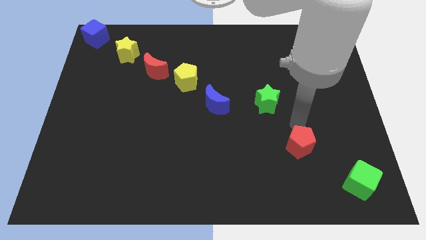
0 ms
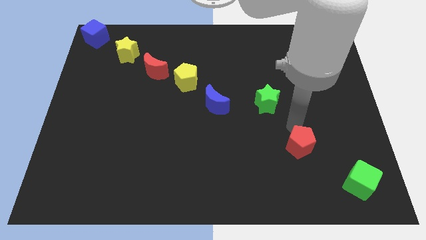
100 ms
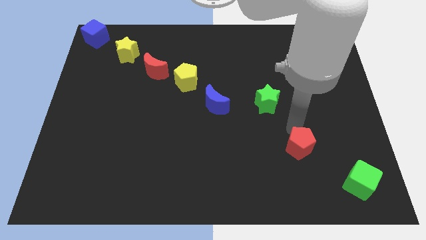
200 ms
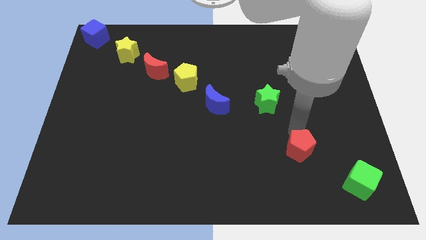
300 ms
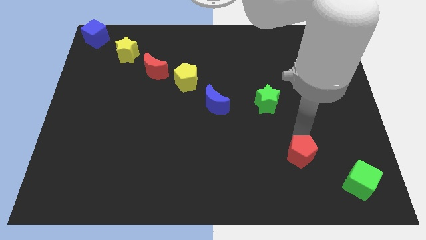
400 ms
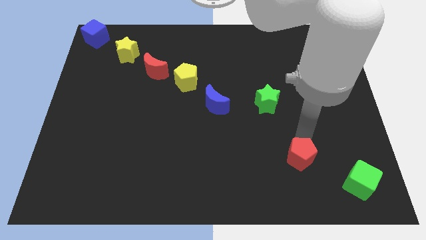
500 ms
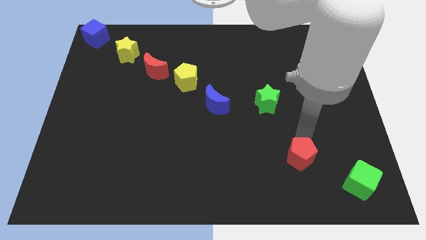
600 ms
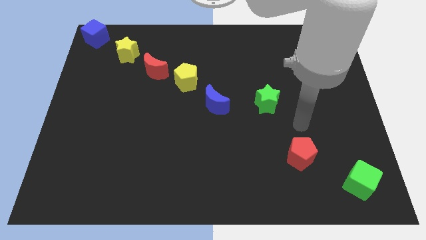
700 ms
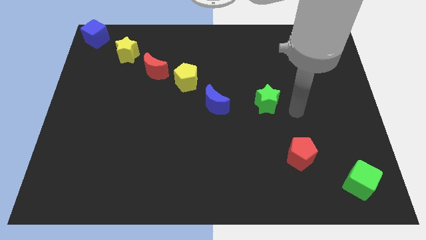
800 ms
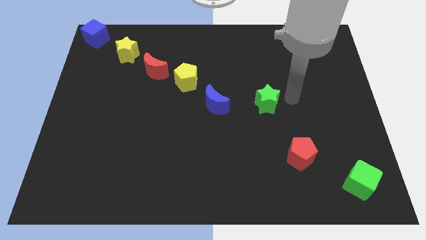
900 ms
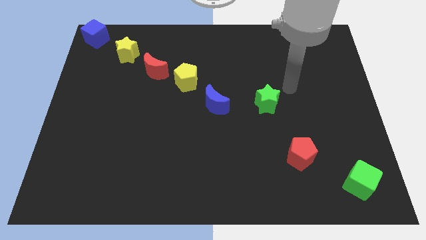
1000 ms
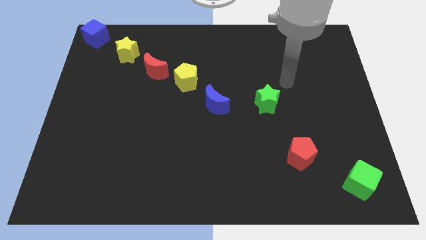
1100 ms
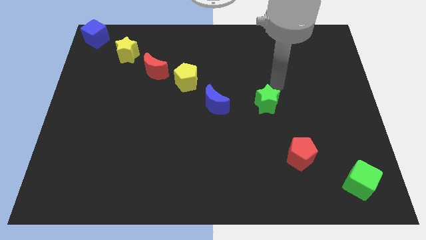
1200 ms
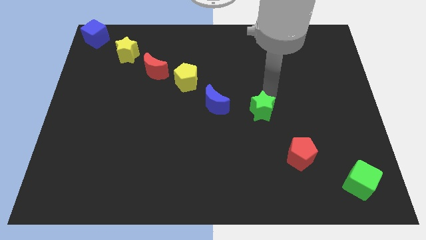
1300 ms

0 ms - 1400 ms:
move your arm to the top of green star

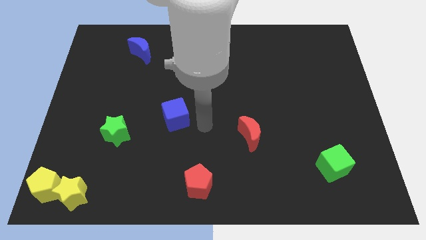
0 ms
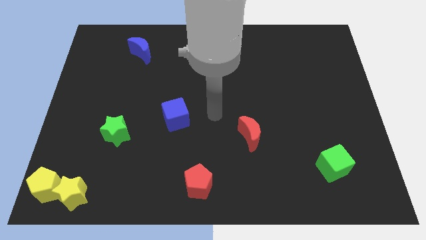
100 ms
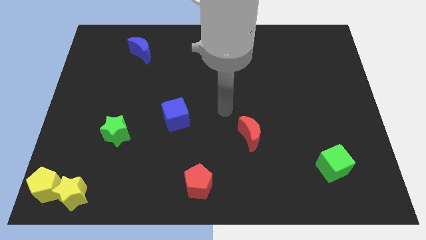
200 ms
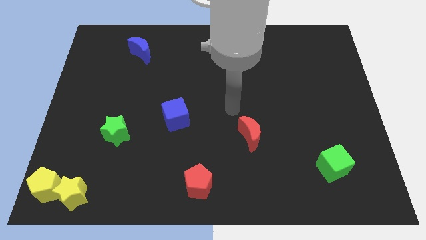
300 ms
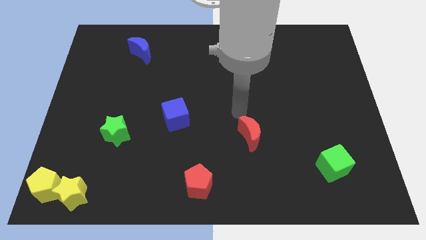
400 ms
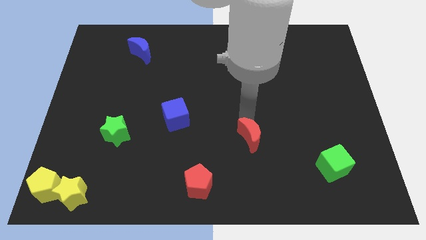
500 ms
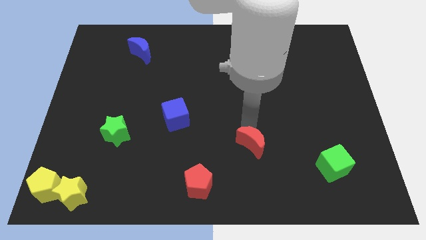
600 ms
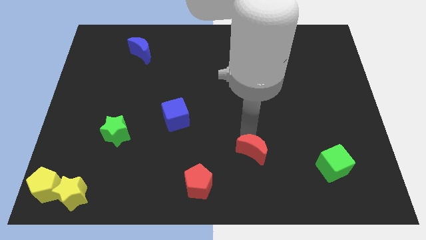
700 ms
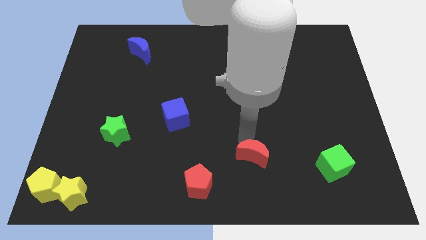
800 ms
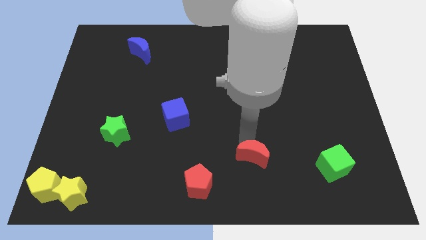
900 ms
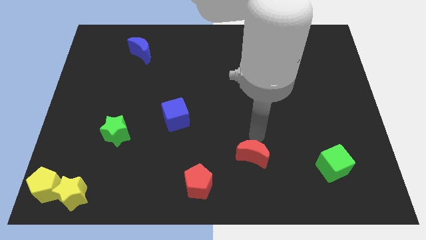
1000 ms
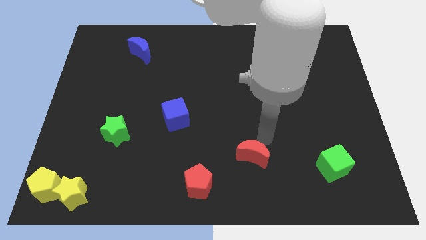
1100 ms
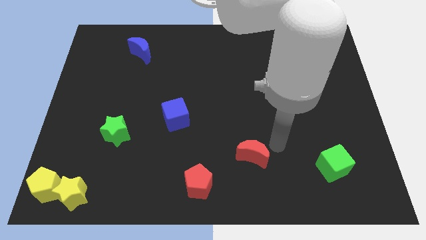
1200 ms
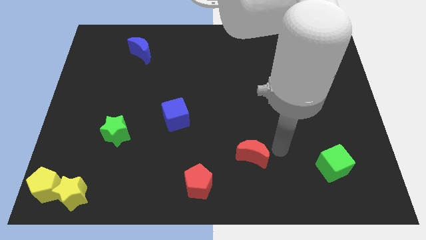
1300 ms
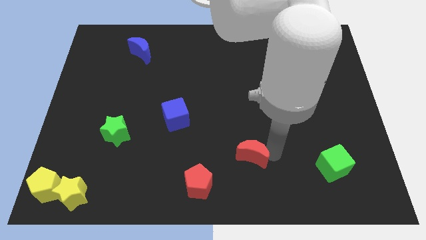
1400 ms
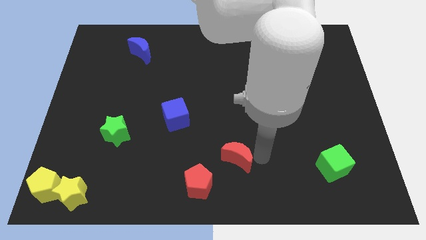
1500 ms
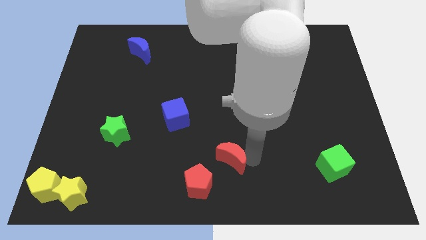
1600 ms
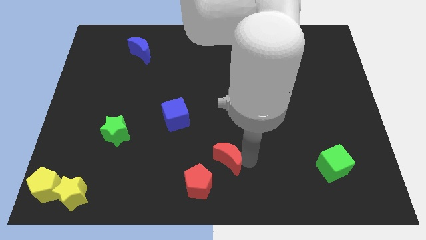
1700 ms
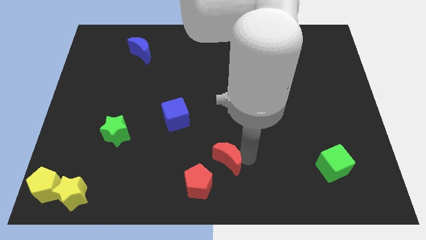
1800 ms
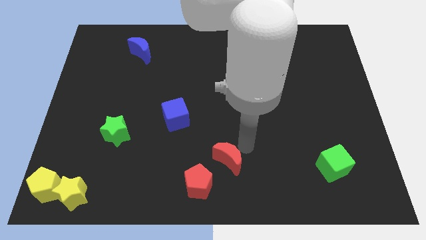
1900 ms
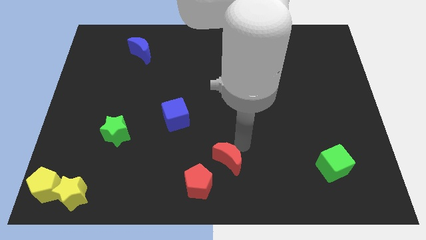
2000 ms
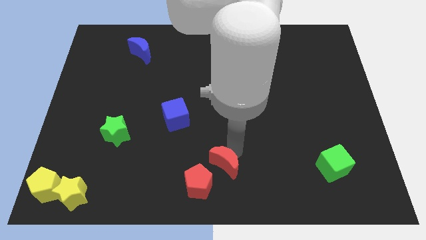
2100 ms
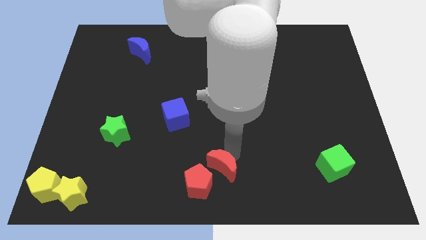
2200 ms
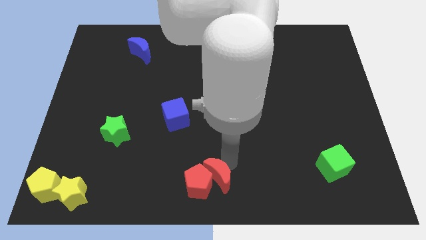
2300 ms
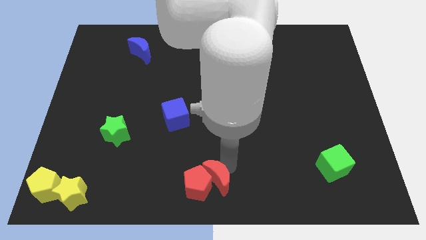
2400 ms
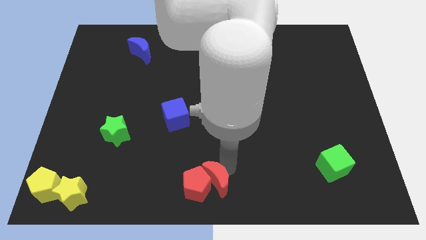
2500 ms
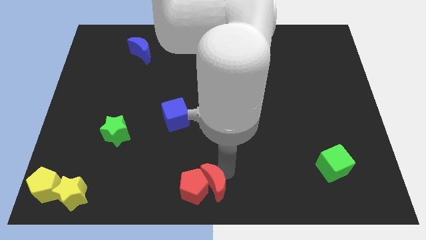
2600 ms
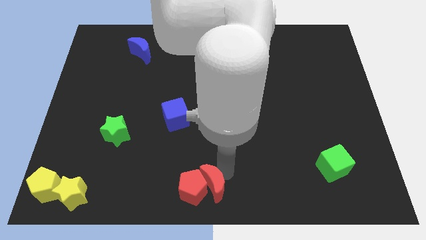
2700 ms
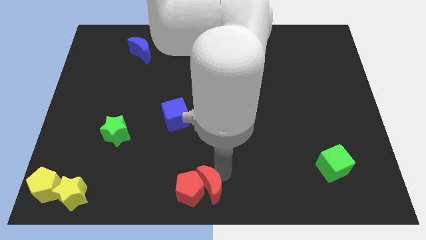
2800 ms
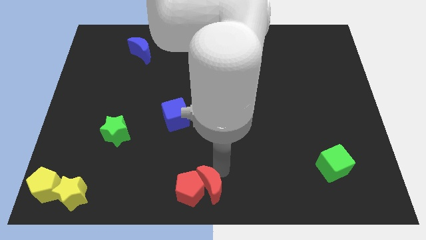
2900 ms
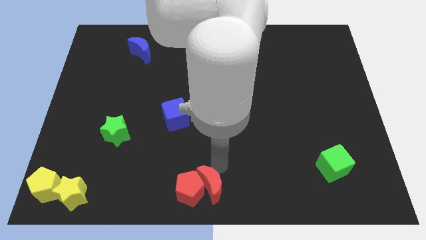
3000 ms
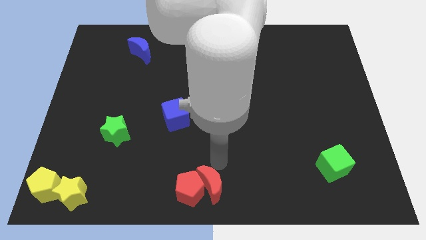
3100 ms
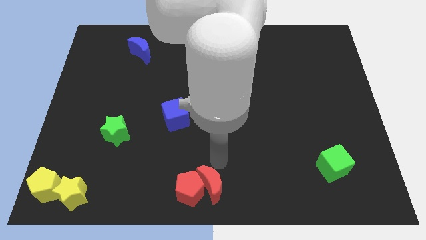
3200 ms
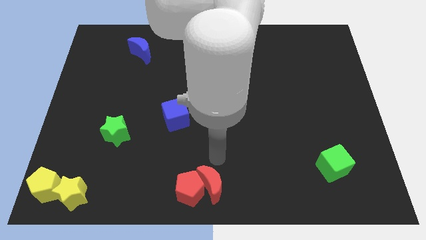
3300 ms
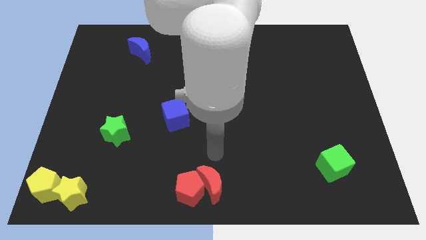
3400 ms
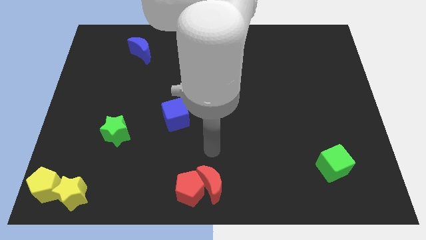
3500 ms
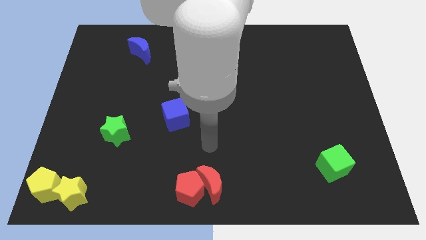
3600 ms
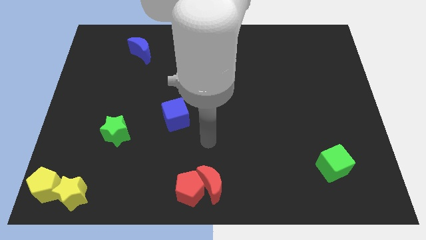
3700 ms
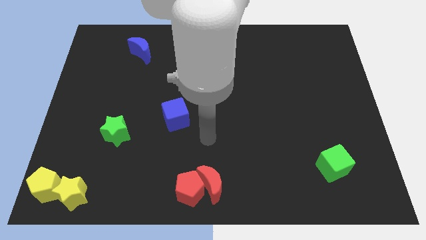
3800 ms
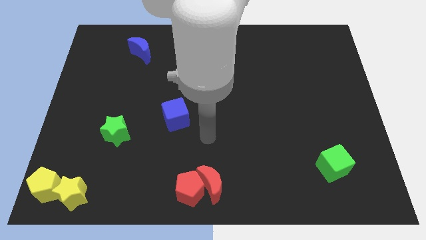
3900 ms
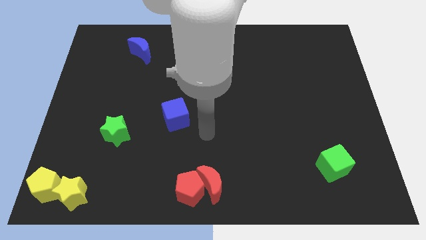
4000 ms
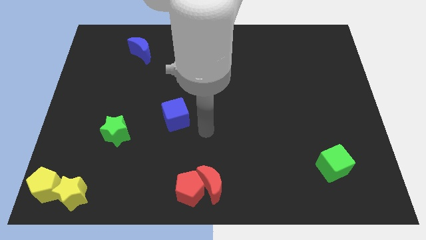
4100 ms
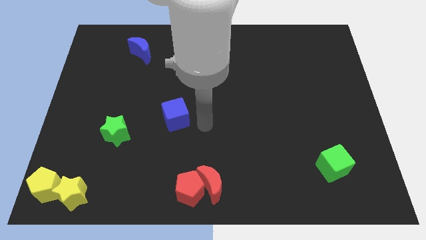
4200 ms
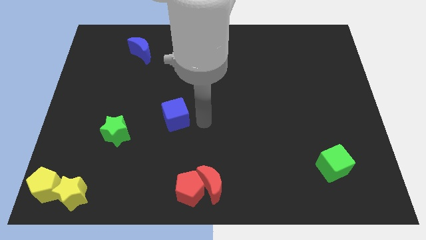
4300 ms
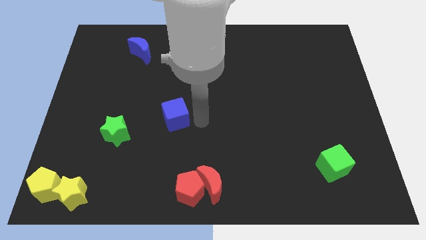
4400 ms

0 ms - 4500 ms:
move red moon into the red pentagon

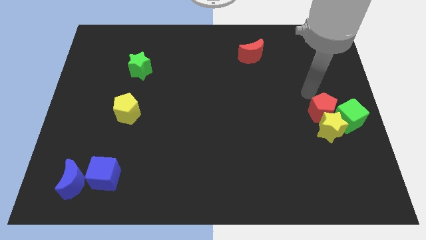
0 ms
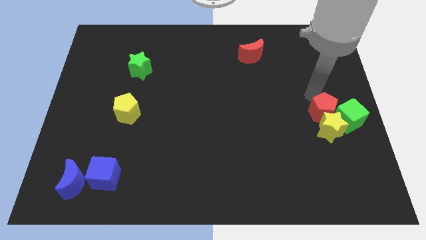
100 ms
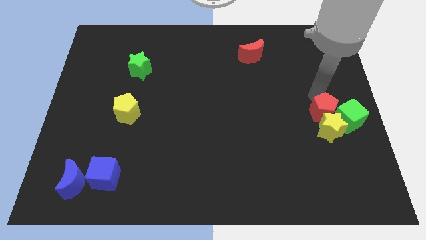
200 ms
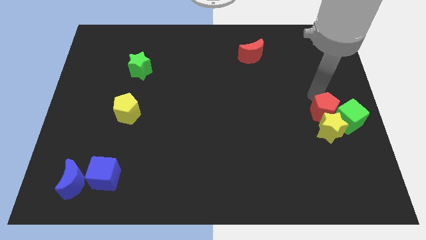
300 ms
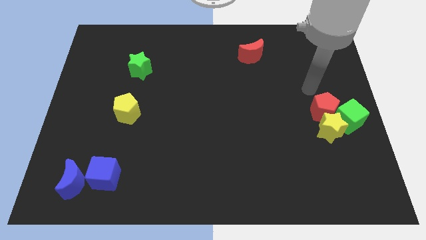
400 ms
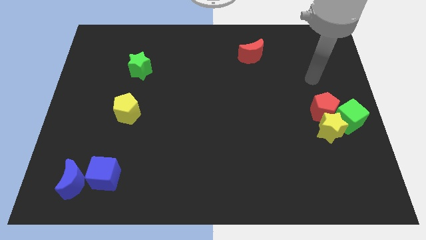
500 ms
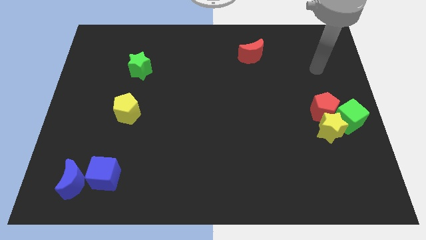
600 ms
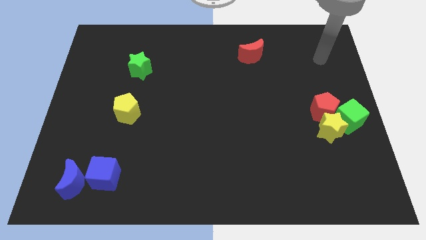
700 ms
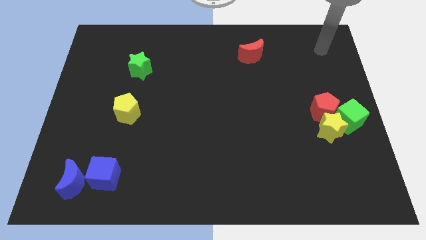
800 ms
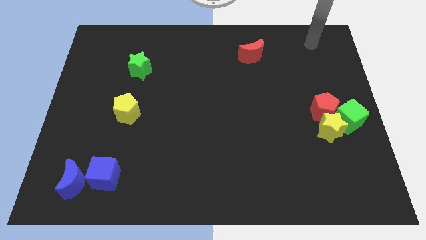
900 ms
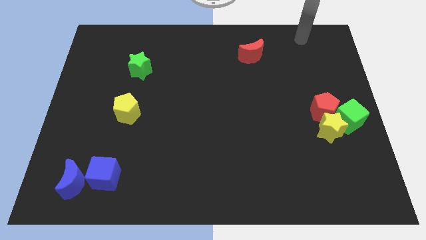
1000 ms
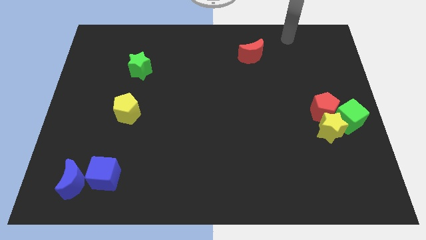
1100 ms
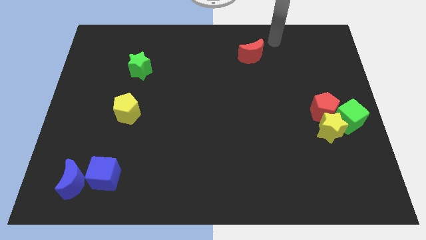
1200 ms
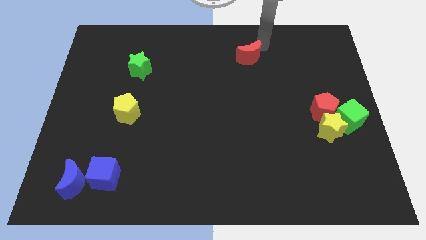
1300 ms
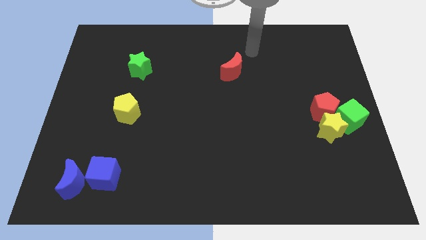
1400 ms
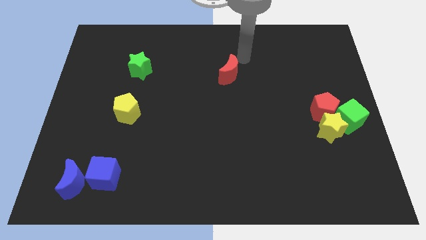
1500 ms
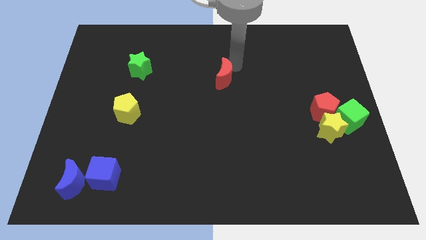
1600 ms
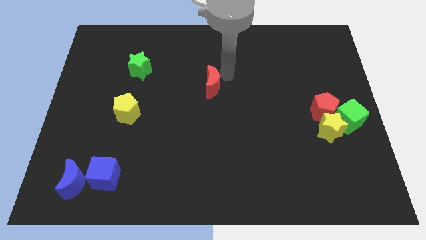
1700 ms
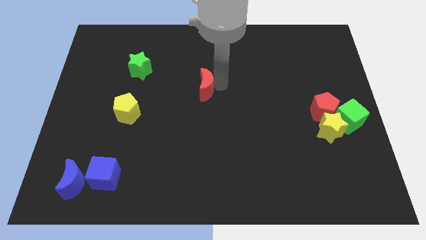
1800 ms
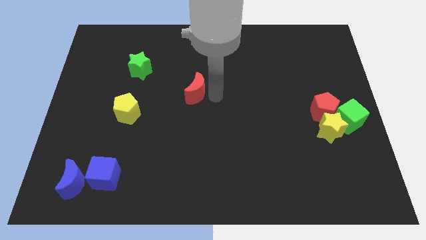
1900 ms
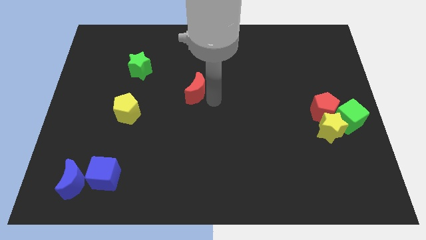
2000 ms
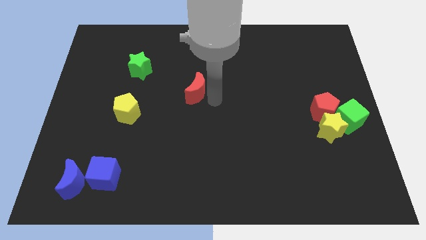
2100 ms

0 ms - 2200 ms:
drag red moon to the center of the board

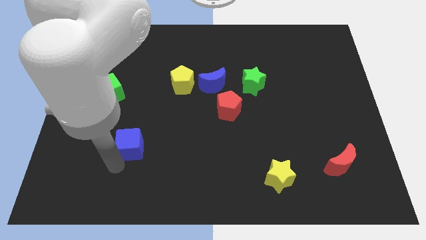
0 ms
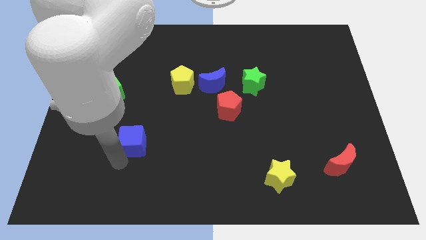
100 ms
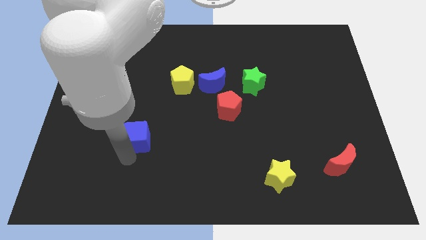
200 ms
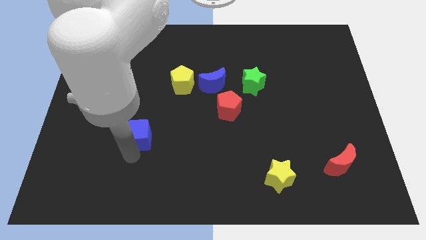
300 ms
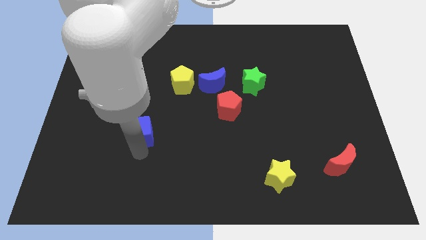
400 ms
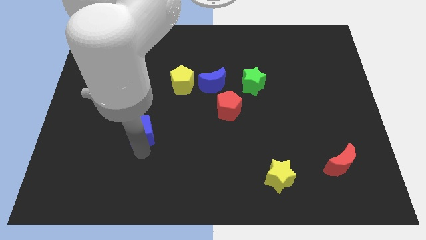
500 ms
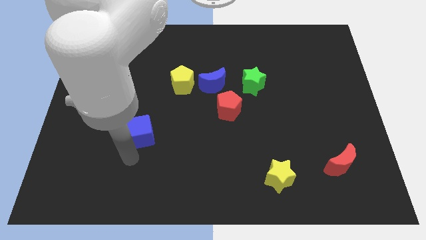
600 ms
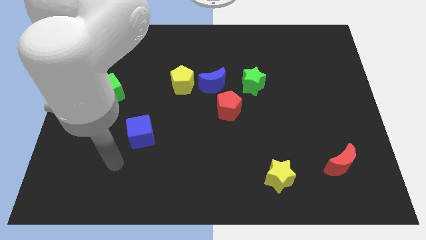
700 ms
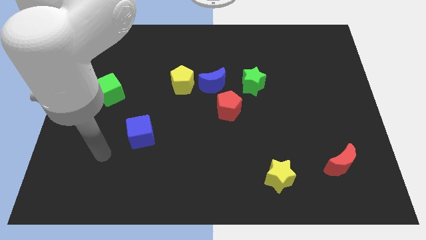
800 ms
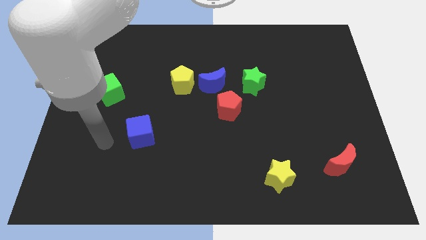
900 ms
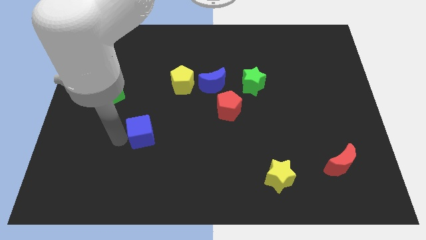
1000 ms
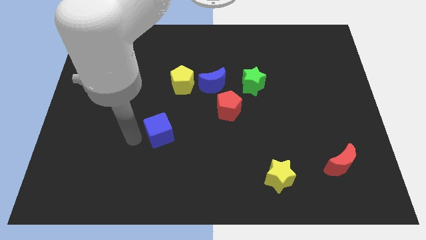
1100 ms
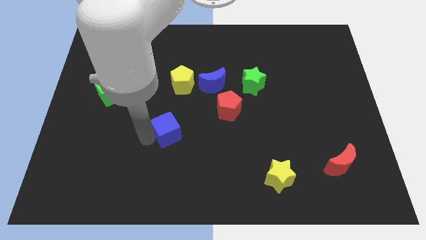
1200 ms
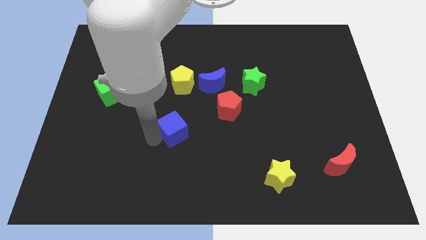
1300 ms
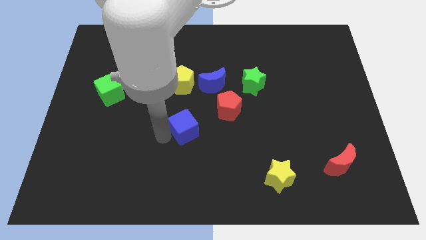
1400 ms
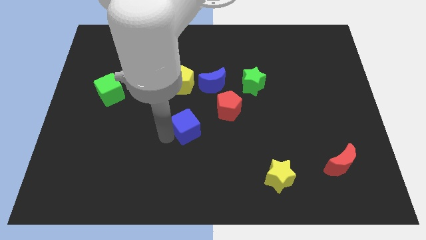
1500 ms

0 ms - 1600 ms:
move the blue cube towards right
